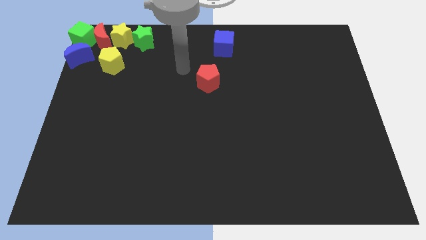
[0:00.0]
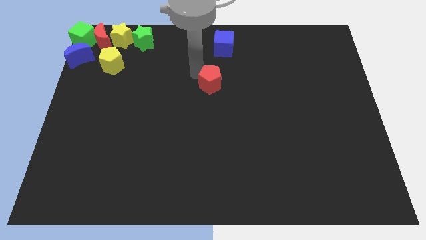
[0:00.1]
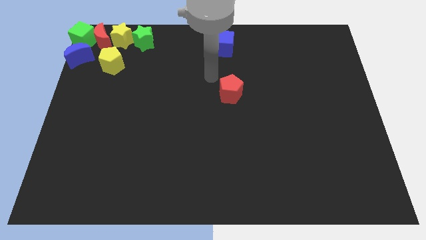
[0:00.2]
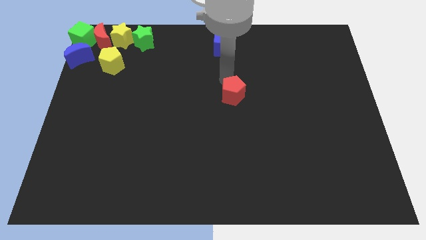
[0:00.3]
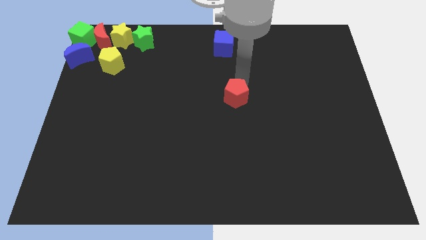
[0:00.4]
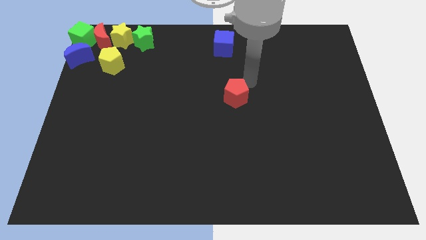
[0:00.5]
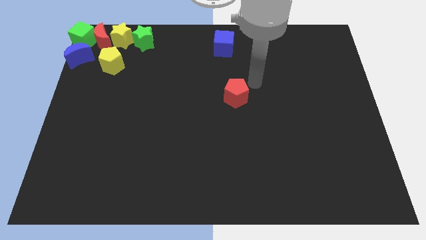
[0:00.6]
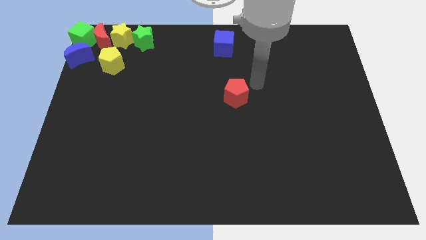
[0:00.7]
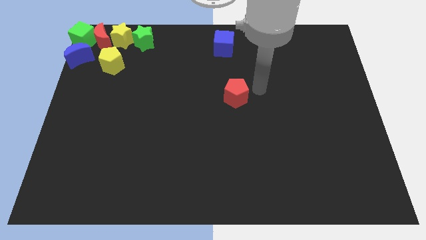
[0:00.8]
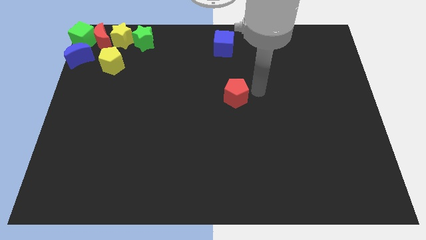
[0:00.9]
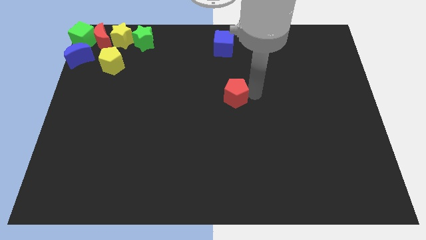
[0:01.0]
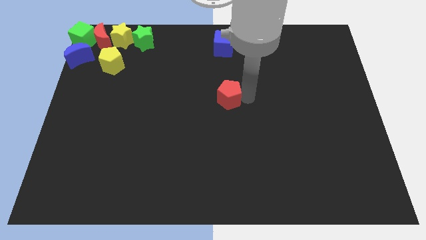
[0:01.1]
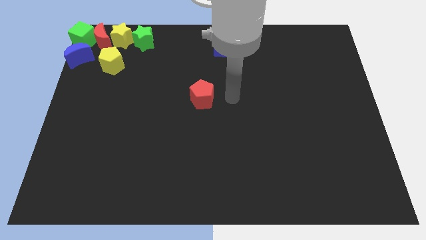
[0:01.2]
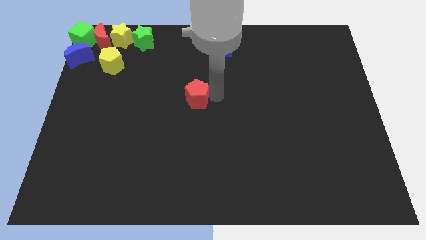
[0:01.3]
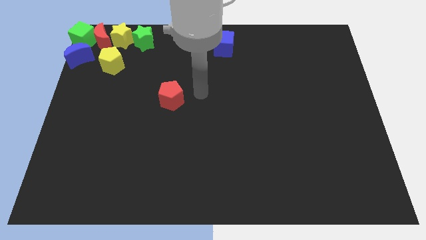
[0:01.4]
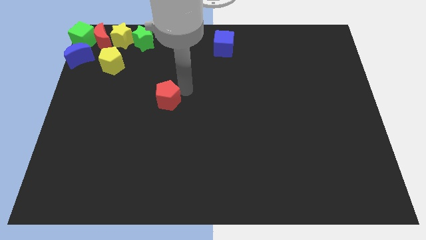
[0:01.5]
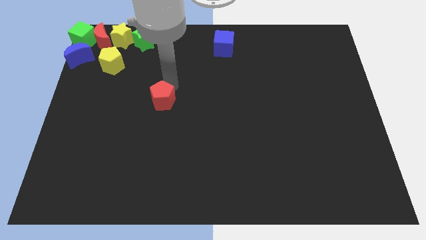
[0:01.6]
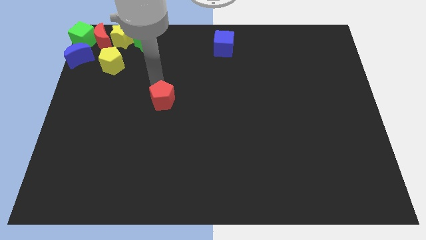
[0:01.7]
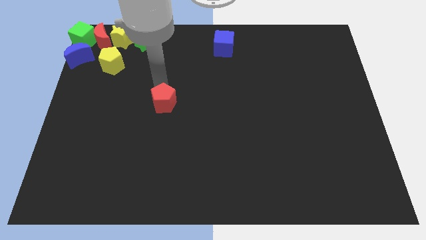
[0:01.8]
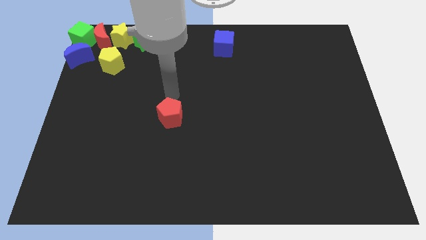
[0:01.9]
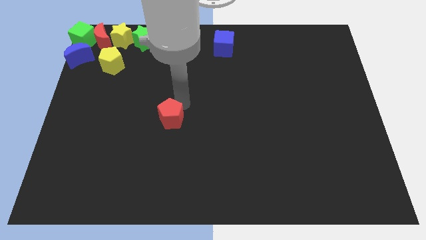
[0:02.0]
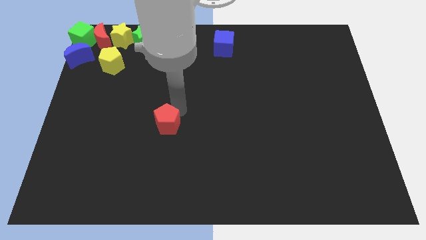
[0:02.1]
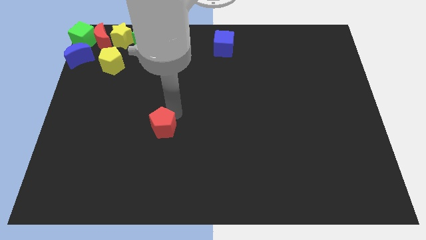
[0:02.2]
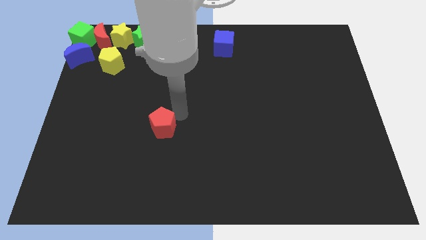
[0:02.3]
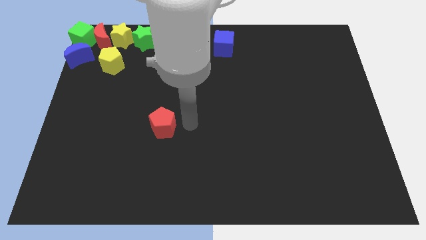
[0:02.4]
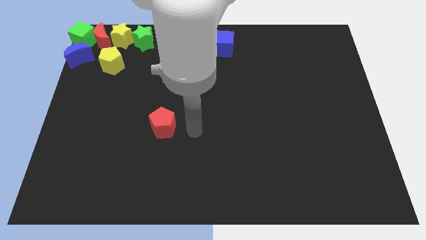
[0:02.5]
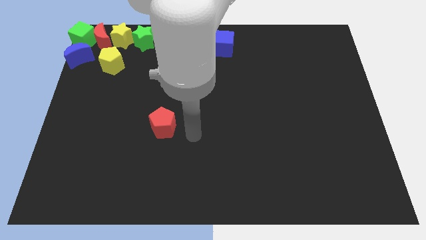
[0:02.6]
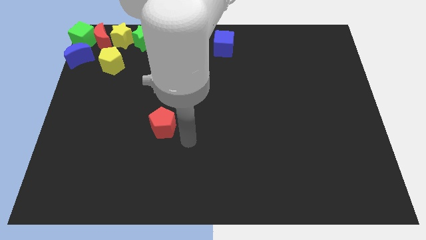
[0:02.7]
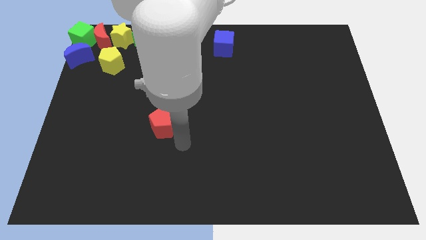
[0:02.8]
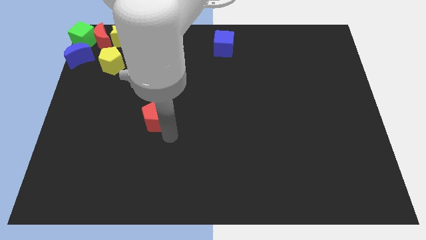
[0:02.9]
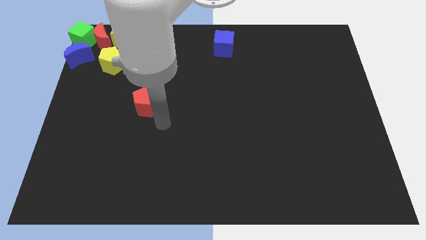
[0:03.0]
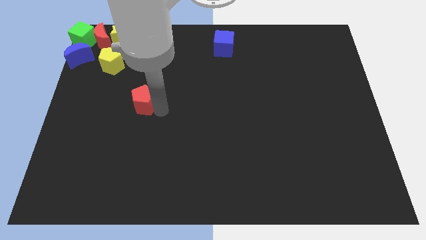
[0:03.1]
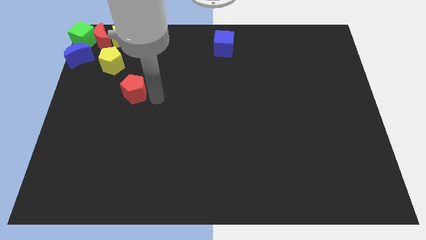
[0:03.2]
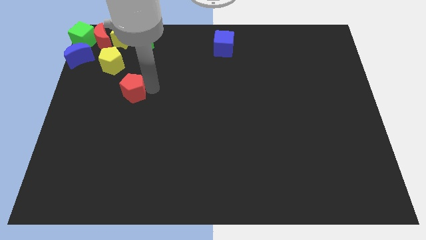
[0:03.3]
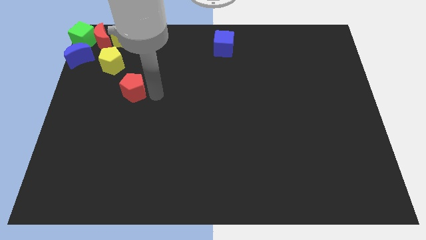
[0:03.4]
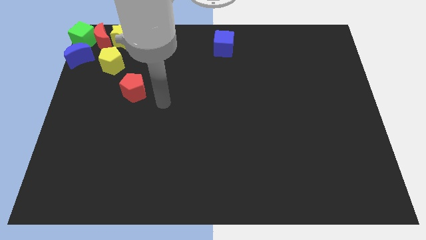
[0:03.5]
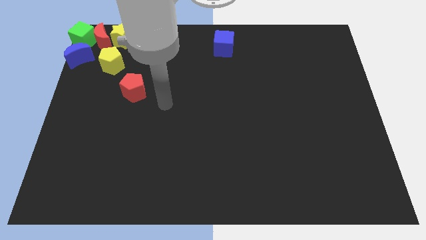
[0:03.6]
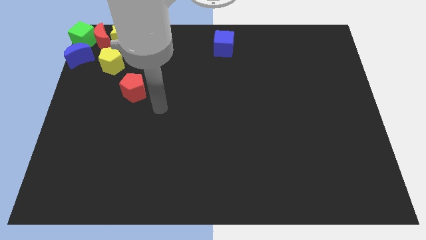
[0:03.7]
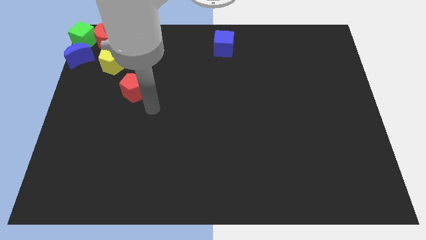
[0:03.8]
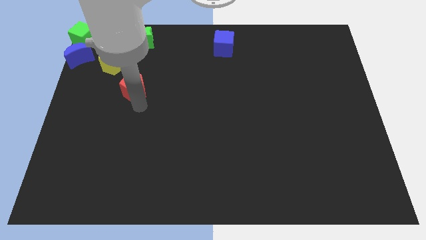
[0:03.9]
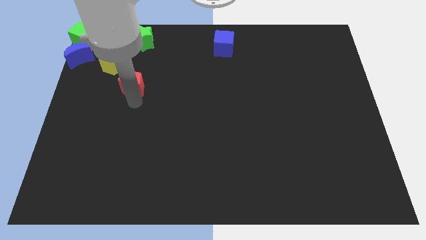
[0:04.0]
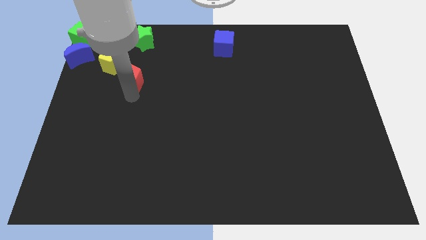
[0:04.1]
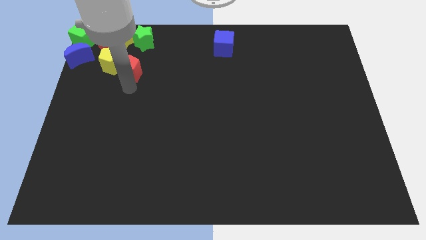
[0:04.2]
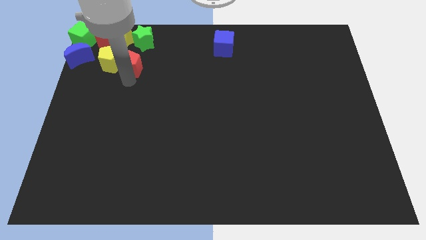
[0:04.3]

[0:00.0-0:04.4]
push the red pentagon into yellow pentagon

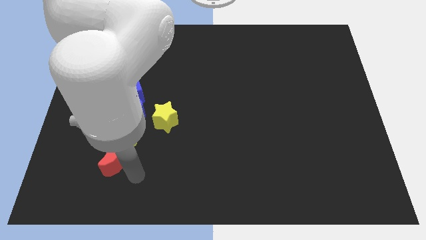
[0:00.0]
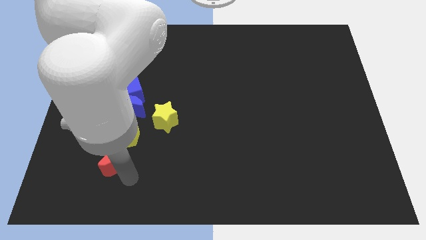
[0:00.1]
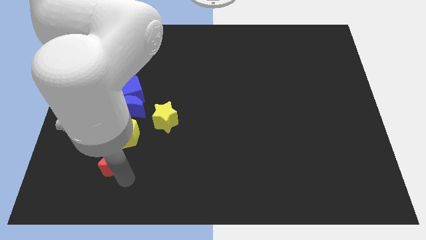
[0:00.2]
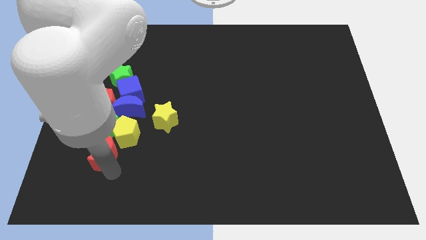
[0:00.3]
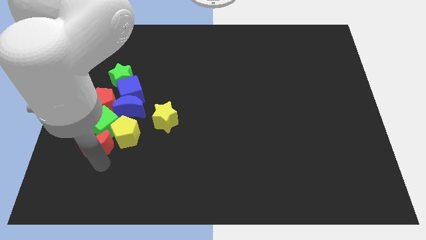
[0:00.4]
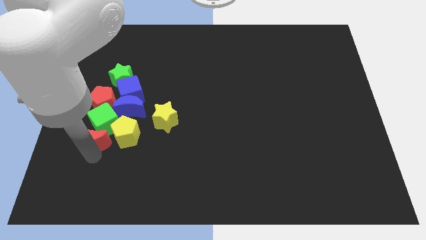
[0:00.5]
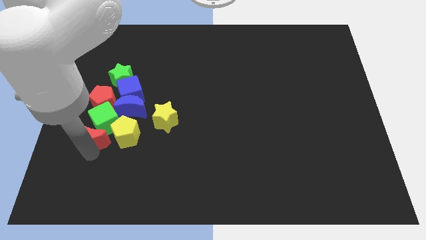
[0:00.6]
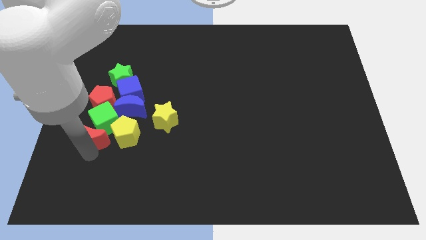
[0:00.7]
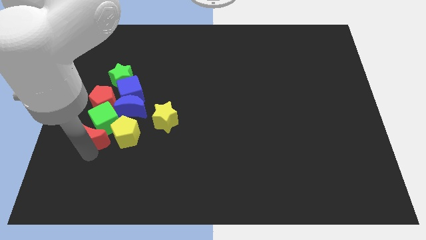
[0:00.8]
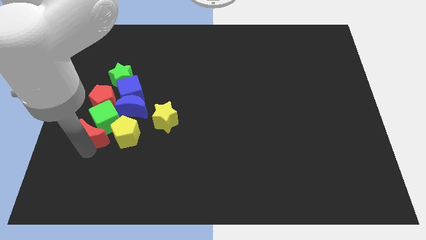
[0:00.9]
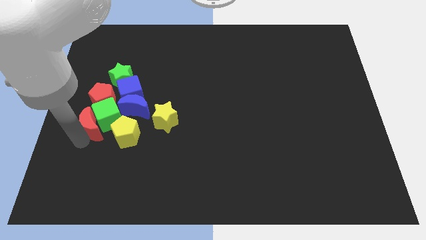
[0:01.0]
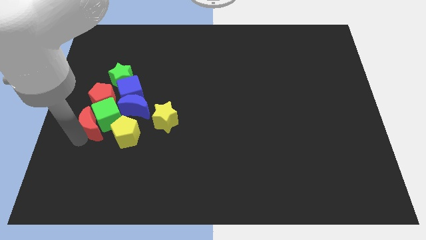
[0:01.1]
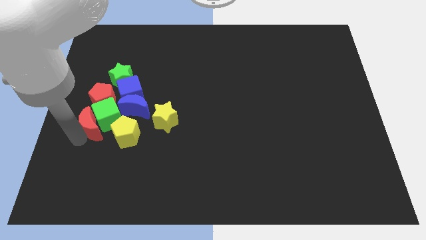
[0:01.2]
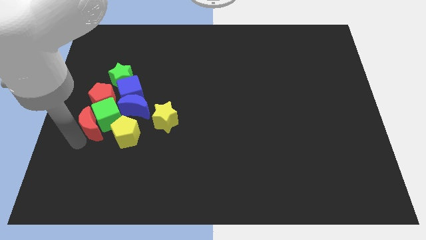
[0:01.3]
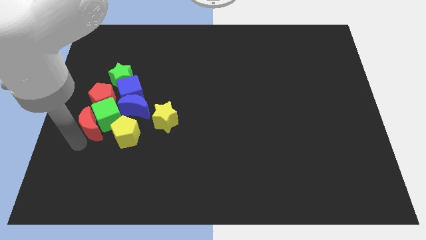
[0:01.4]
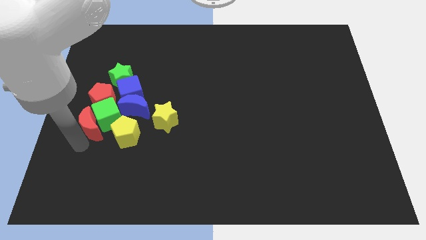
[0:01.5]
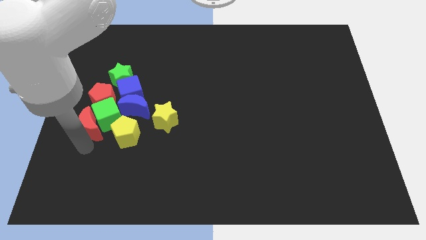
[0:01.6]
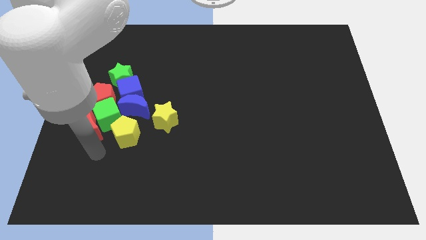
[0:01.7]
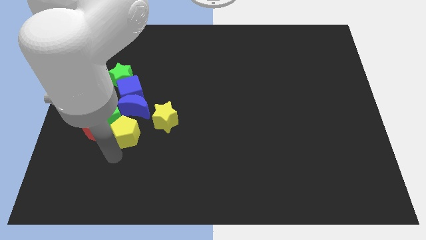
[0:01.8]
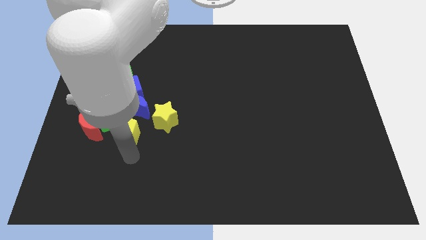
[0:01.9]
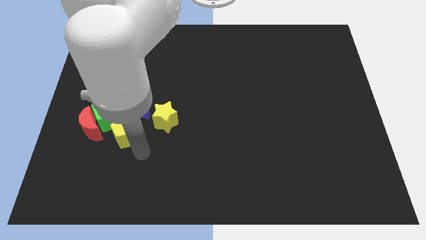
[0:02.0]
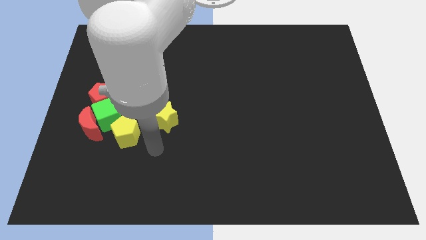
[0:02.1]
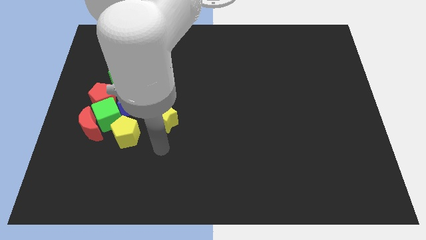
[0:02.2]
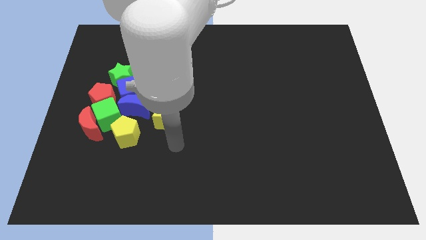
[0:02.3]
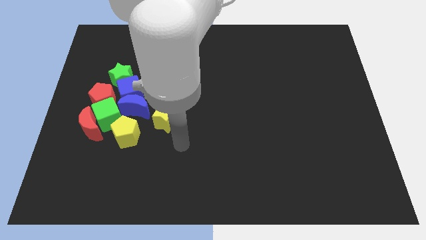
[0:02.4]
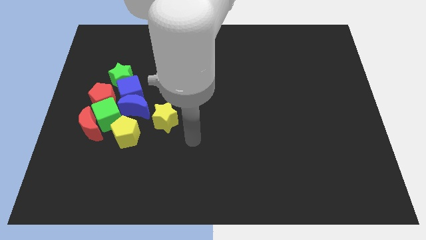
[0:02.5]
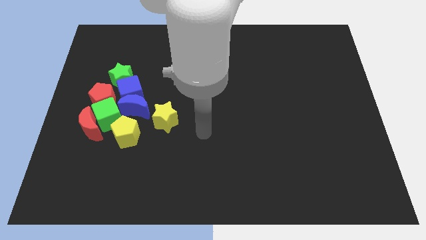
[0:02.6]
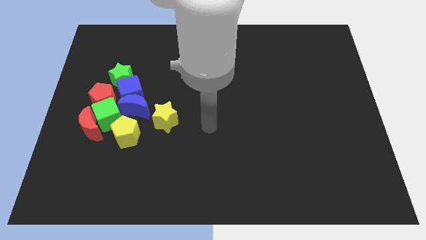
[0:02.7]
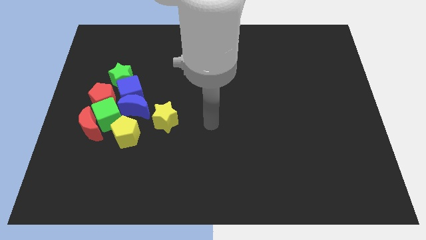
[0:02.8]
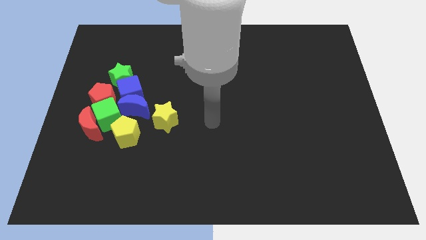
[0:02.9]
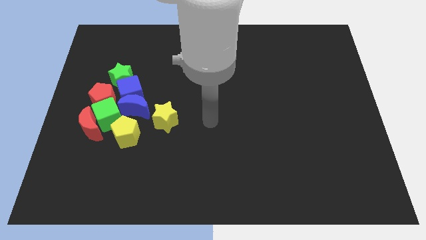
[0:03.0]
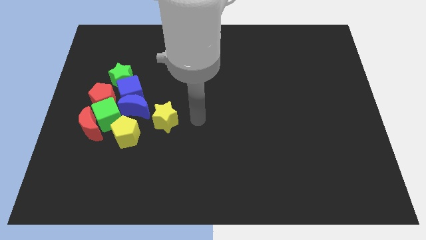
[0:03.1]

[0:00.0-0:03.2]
move the red moon to the left of the green cube

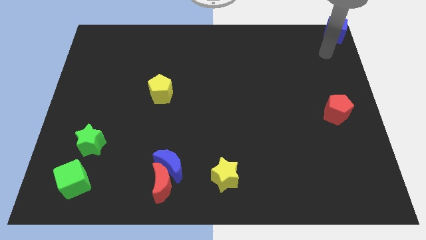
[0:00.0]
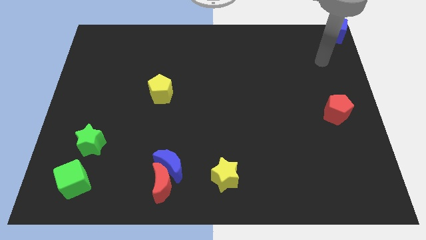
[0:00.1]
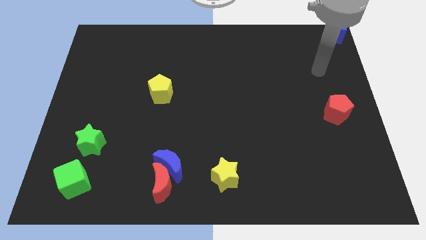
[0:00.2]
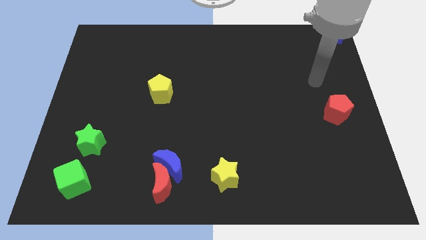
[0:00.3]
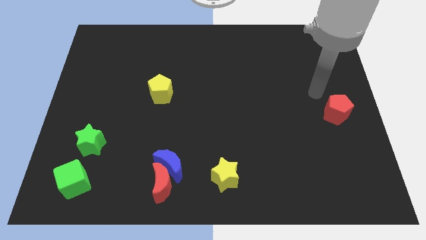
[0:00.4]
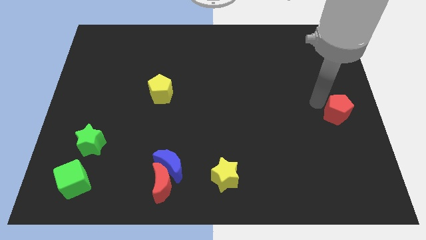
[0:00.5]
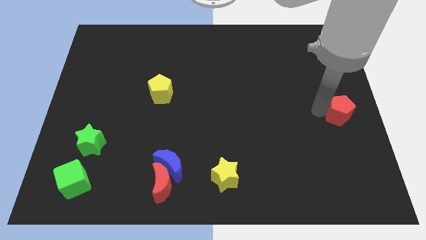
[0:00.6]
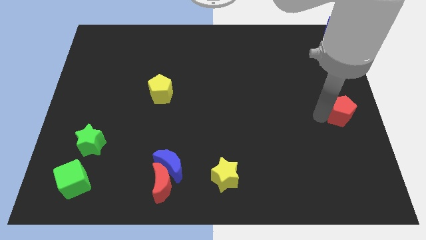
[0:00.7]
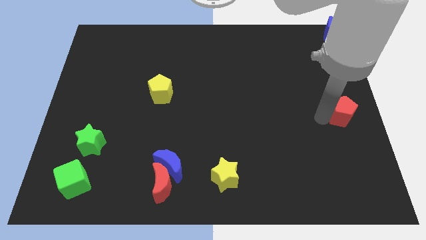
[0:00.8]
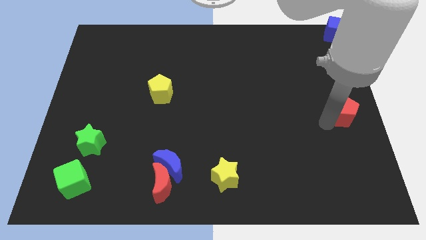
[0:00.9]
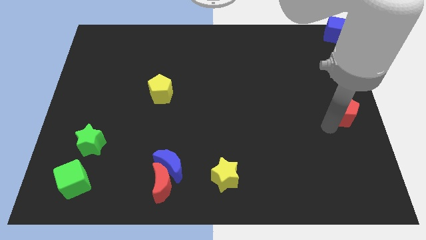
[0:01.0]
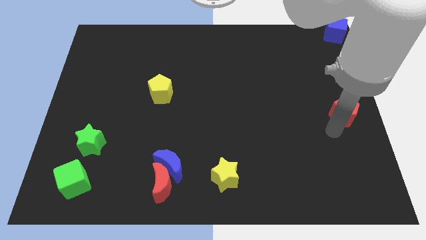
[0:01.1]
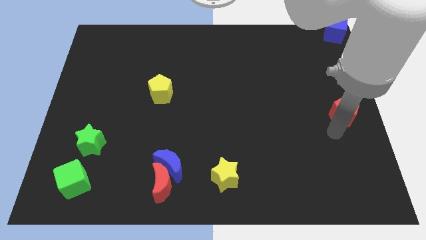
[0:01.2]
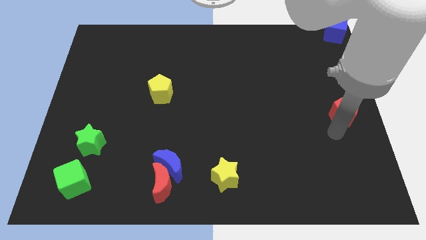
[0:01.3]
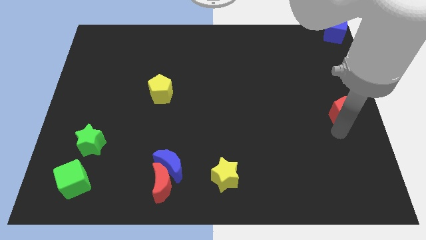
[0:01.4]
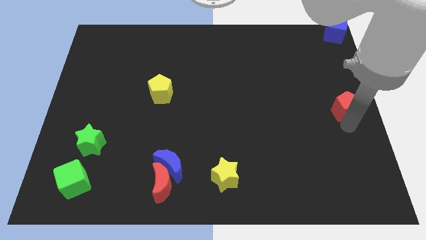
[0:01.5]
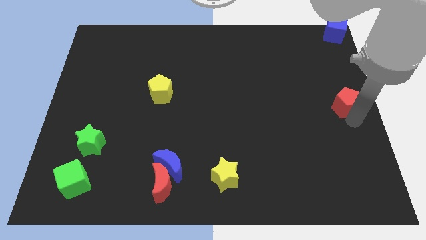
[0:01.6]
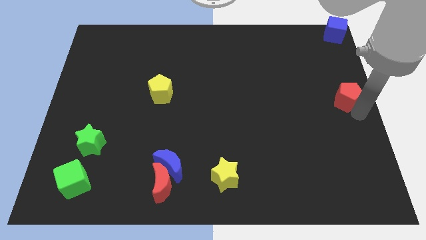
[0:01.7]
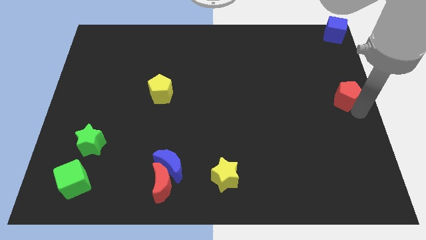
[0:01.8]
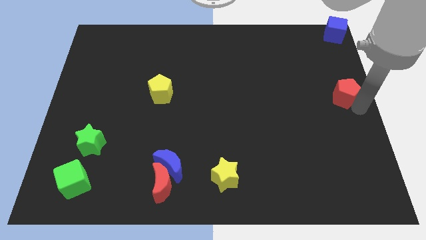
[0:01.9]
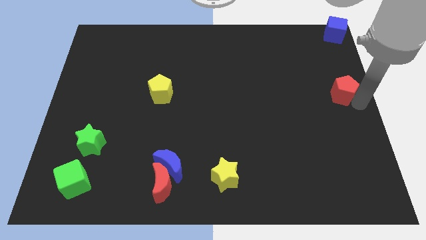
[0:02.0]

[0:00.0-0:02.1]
place red pentagon at the center right
